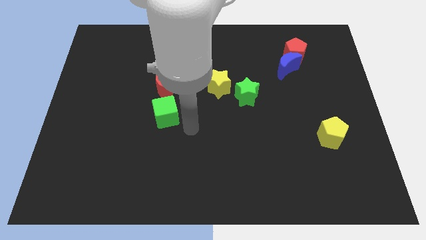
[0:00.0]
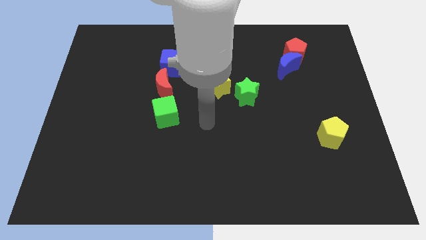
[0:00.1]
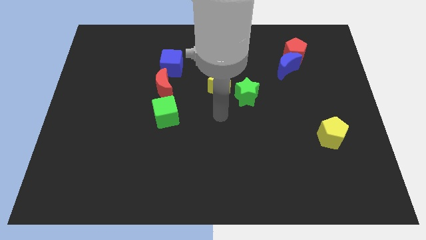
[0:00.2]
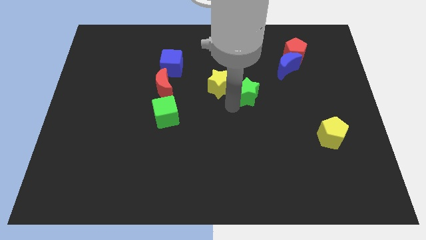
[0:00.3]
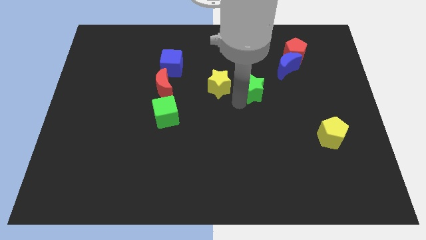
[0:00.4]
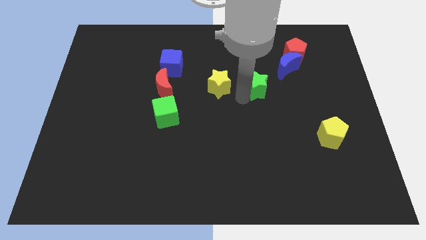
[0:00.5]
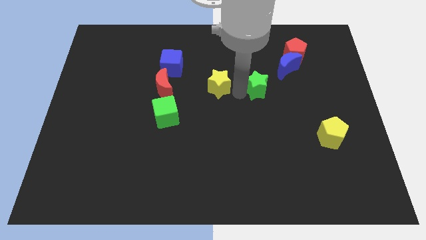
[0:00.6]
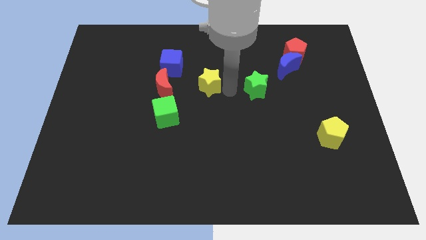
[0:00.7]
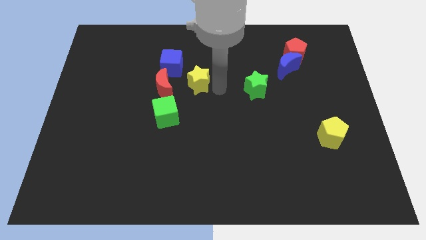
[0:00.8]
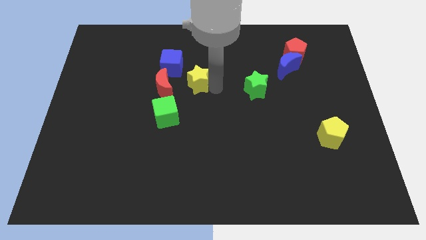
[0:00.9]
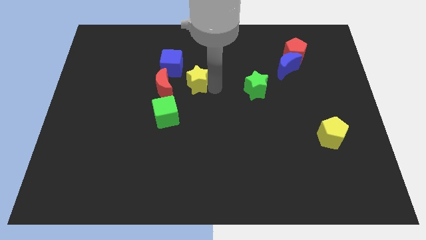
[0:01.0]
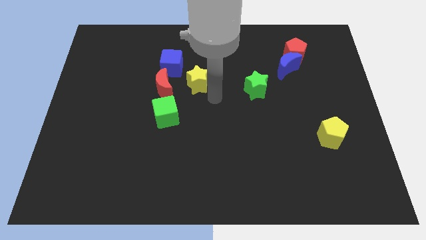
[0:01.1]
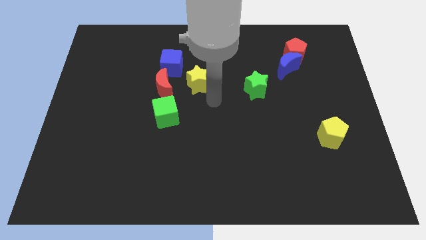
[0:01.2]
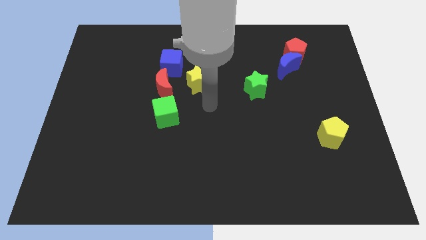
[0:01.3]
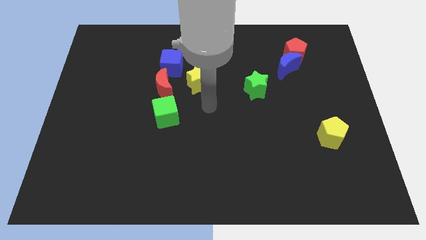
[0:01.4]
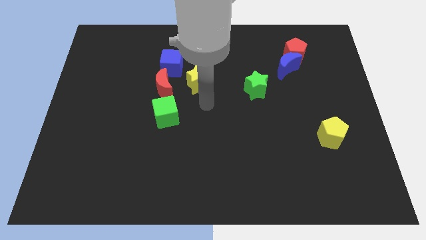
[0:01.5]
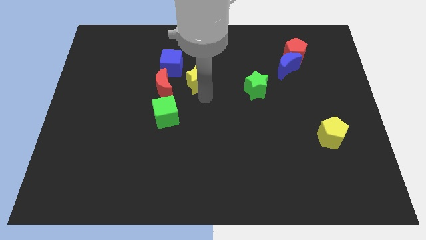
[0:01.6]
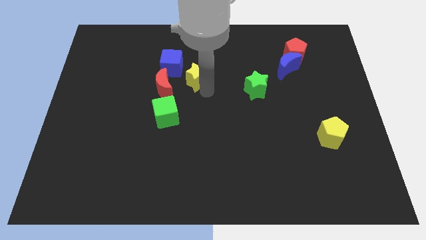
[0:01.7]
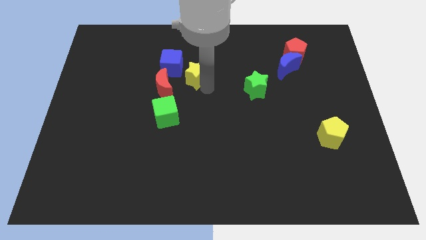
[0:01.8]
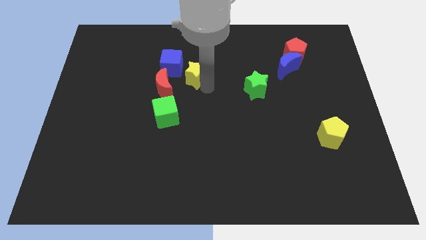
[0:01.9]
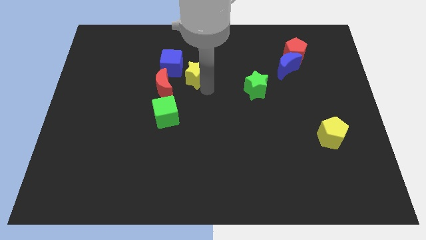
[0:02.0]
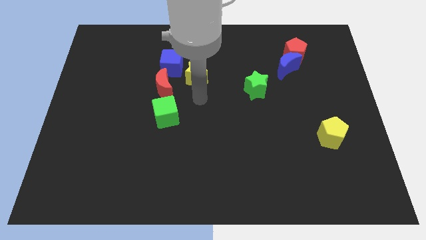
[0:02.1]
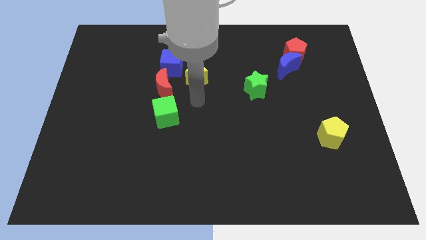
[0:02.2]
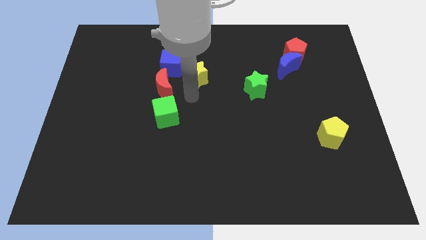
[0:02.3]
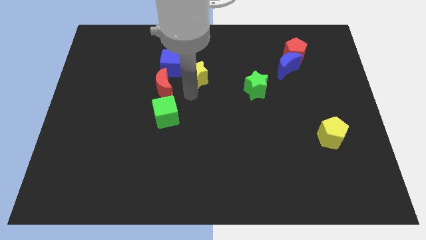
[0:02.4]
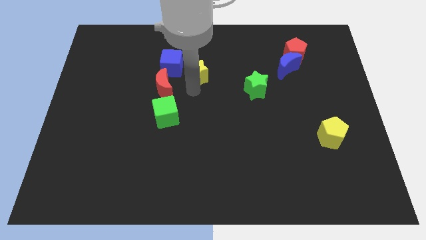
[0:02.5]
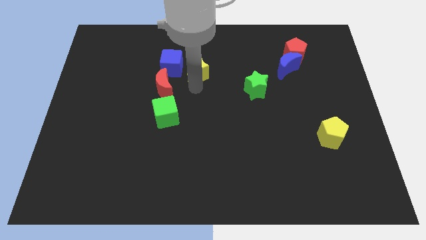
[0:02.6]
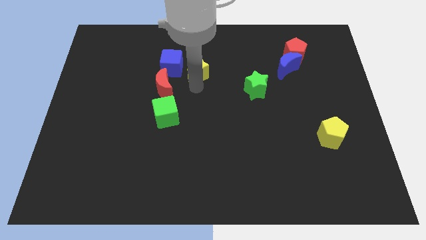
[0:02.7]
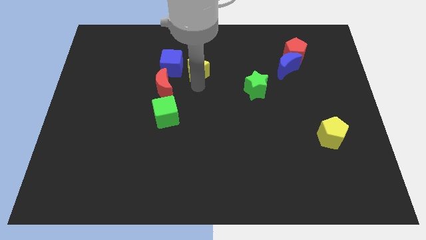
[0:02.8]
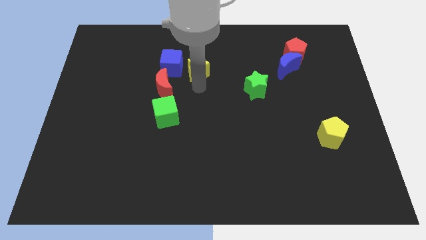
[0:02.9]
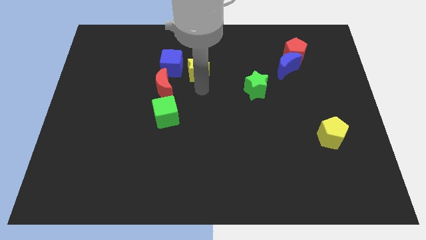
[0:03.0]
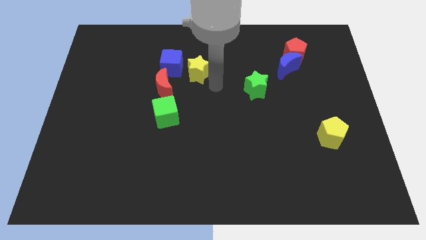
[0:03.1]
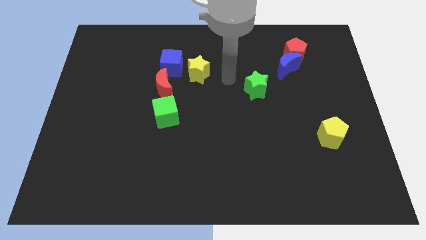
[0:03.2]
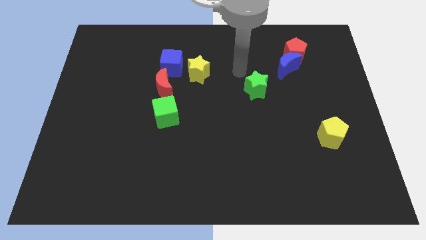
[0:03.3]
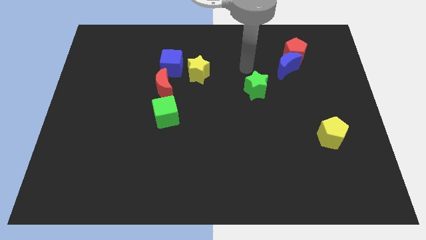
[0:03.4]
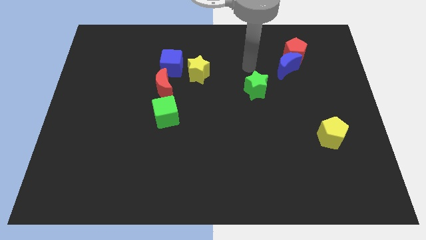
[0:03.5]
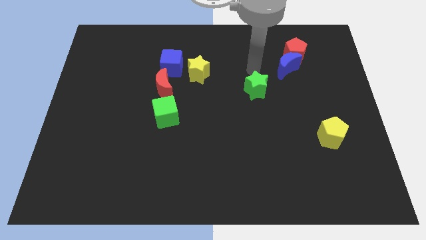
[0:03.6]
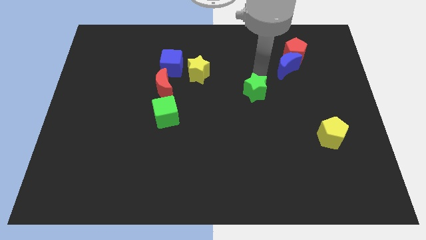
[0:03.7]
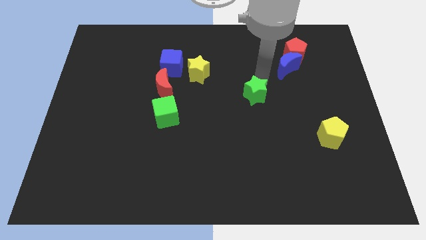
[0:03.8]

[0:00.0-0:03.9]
separate the stars

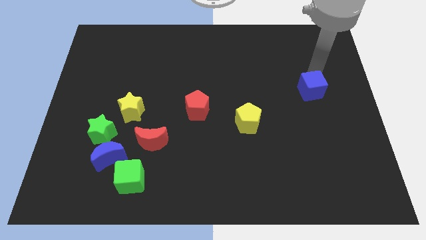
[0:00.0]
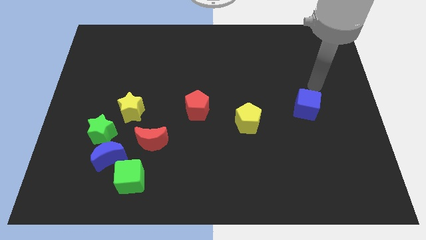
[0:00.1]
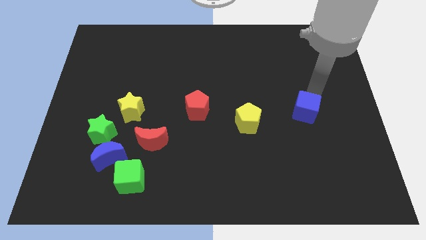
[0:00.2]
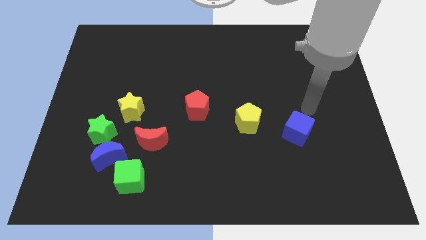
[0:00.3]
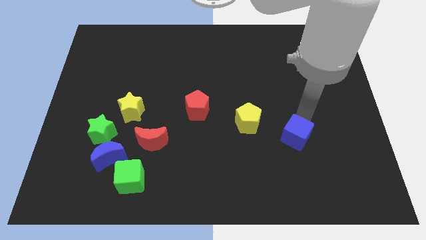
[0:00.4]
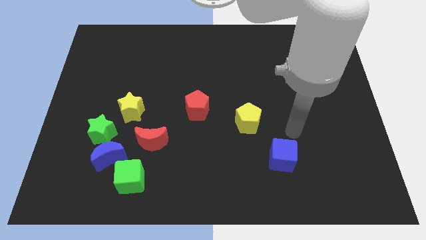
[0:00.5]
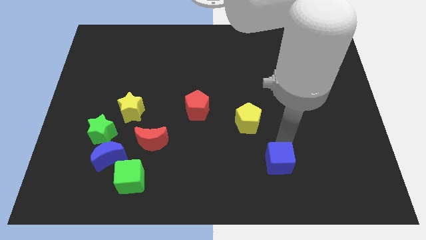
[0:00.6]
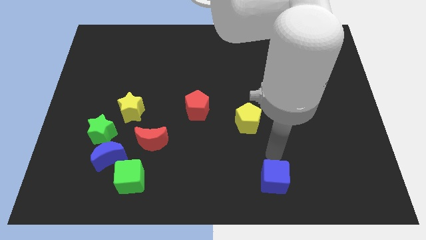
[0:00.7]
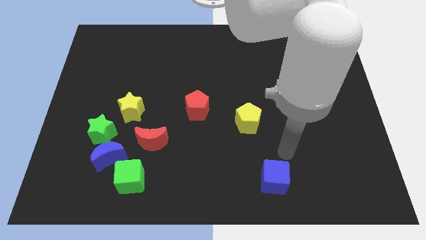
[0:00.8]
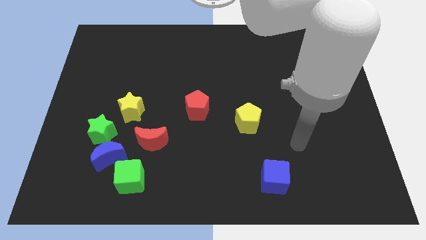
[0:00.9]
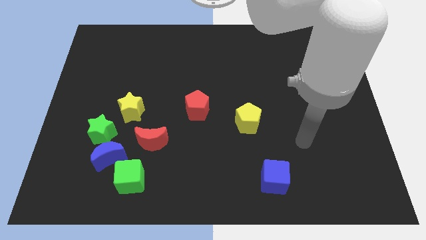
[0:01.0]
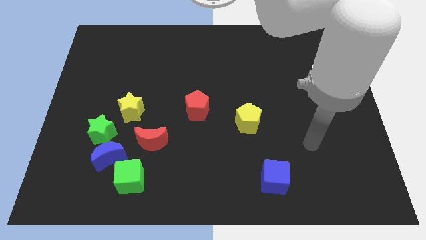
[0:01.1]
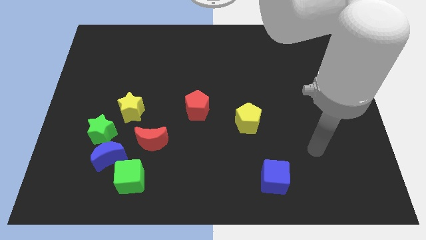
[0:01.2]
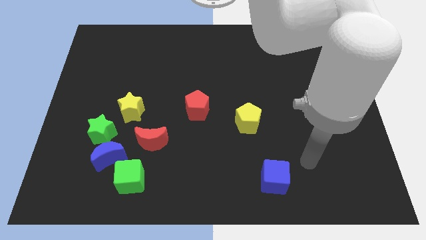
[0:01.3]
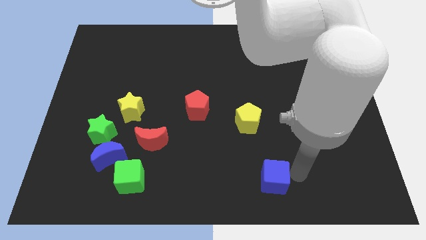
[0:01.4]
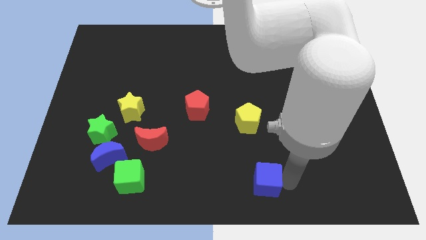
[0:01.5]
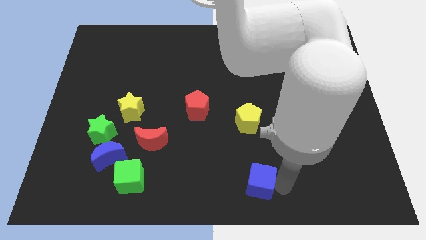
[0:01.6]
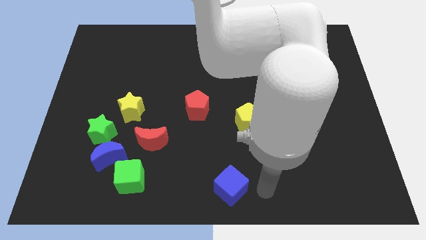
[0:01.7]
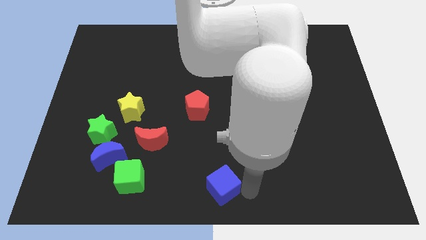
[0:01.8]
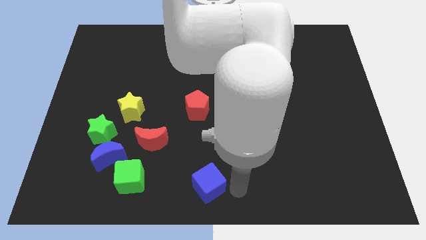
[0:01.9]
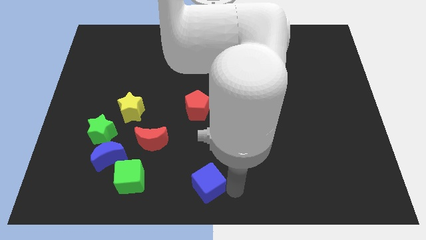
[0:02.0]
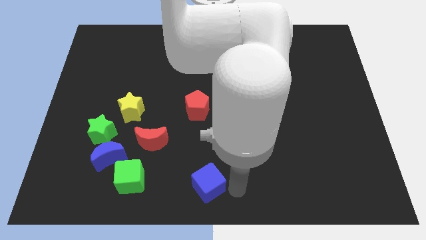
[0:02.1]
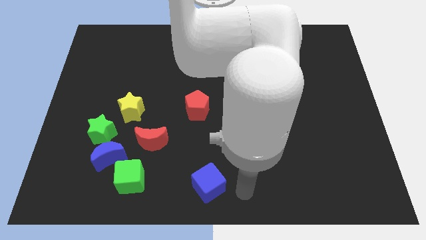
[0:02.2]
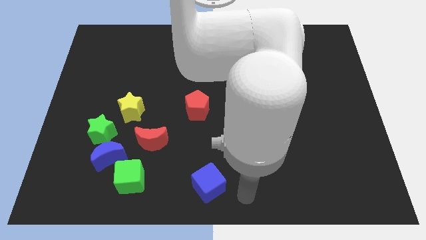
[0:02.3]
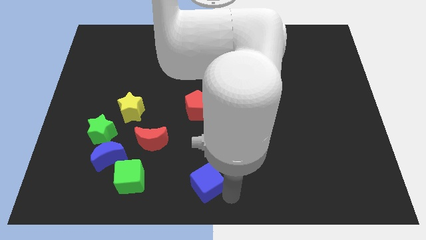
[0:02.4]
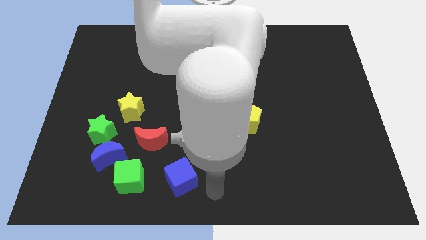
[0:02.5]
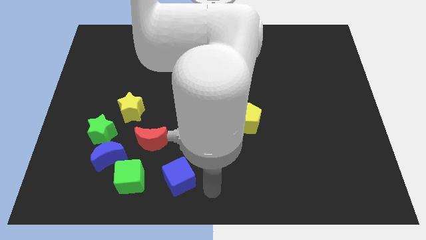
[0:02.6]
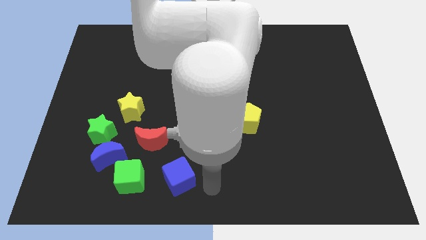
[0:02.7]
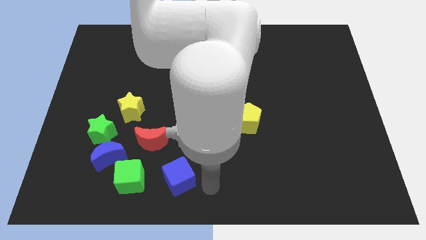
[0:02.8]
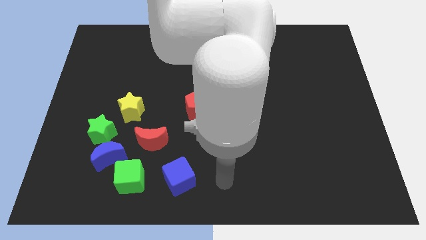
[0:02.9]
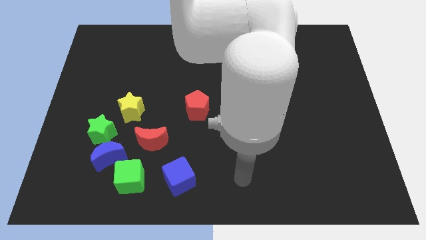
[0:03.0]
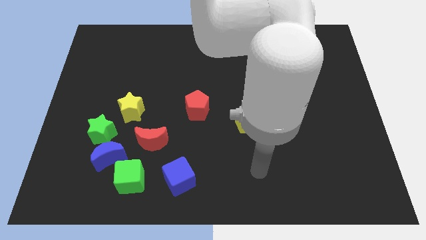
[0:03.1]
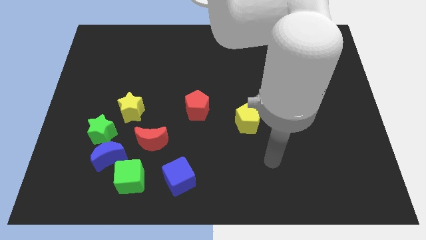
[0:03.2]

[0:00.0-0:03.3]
place the blue cube parallel to the right side of the green cube

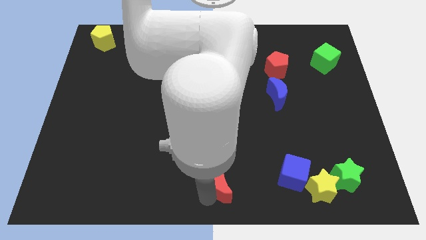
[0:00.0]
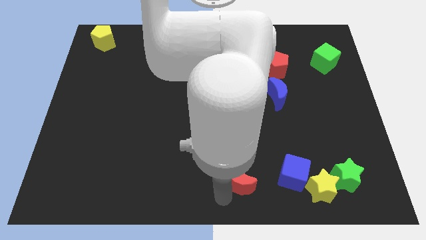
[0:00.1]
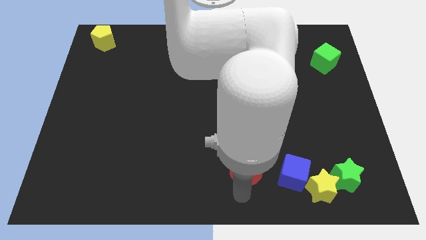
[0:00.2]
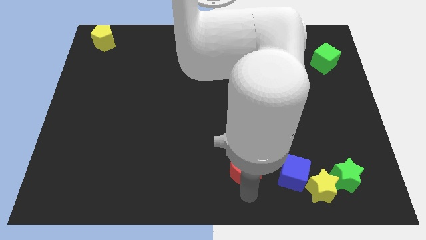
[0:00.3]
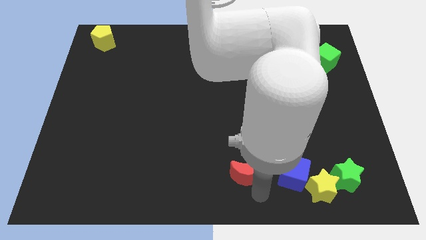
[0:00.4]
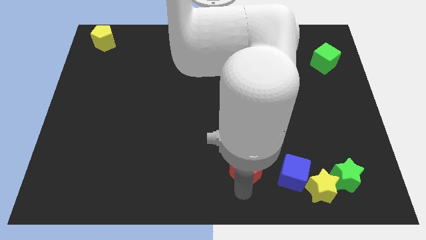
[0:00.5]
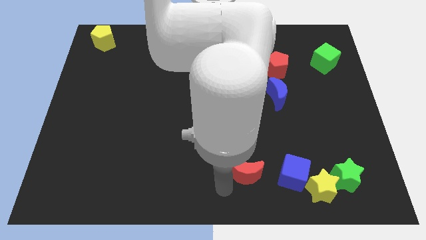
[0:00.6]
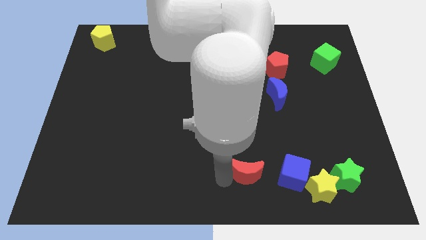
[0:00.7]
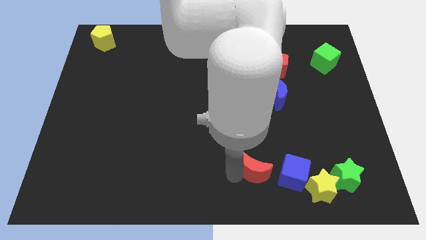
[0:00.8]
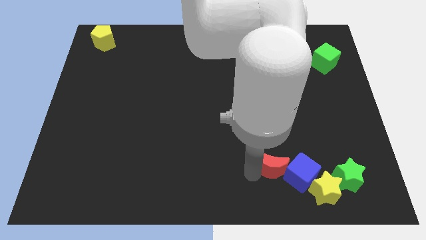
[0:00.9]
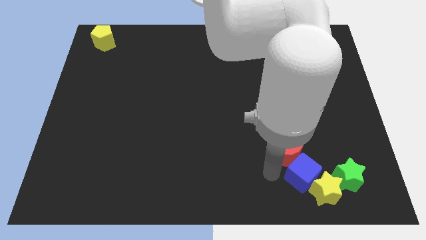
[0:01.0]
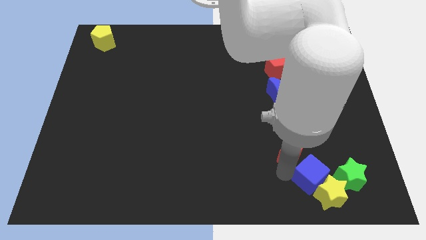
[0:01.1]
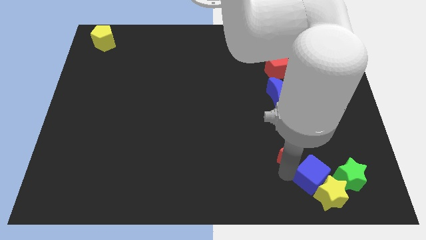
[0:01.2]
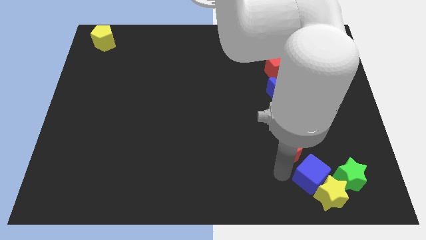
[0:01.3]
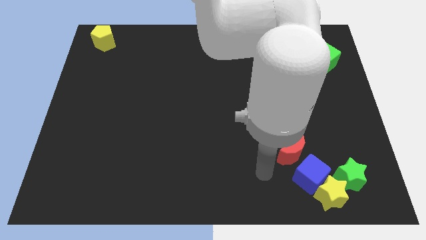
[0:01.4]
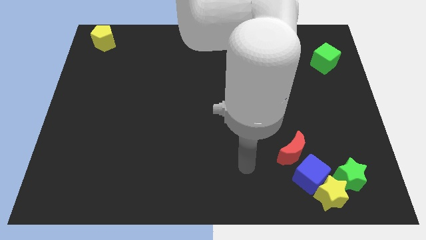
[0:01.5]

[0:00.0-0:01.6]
push the red moon into the blue cube

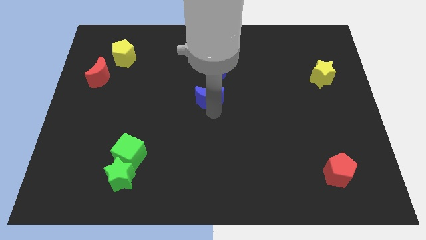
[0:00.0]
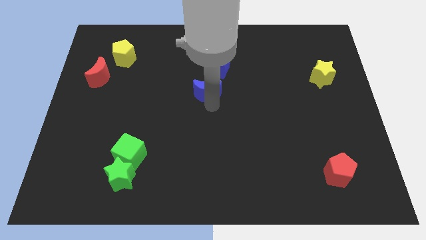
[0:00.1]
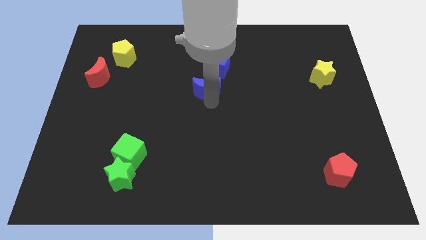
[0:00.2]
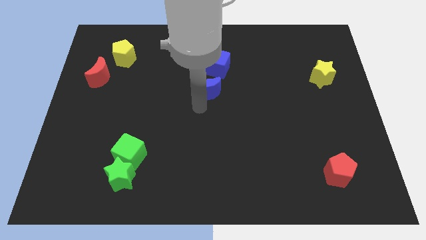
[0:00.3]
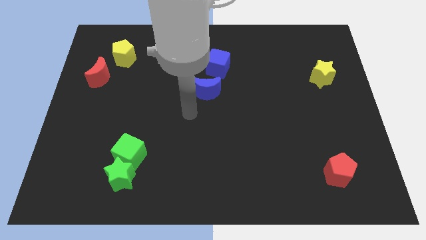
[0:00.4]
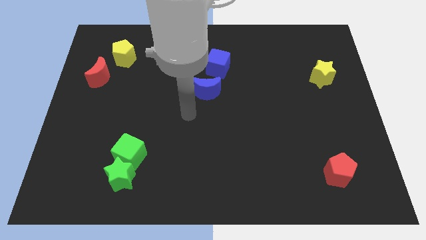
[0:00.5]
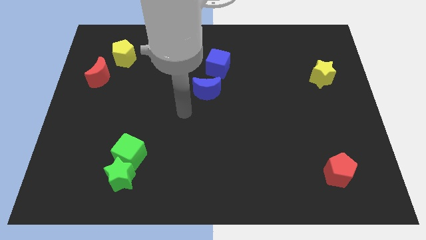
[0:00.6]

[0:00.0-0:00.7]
place the blue moon at the bottom of blue cube
